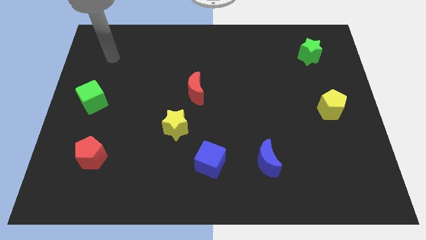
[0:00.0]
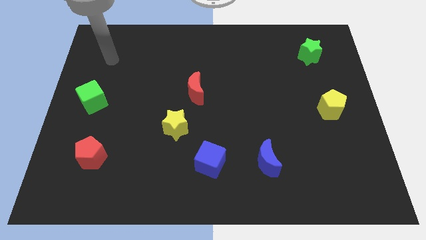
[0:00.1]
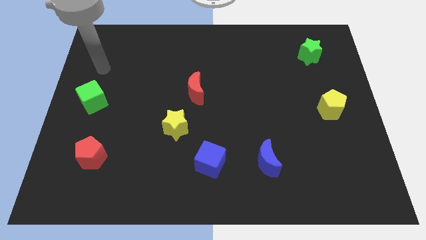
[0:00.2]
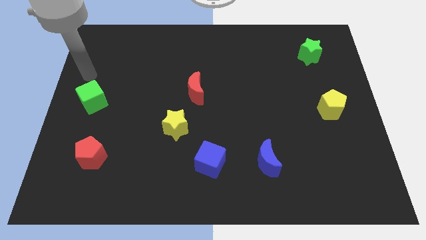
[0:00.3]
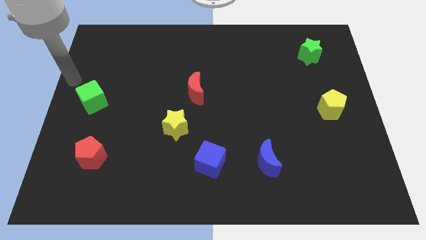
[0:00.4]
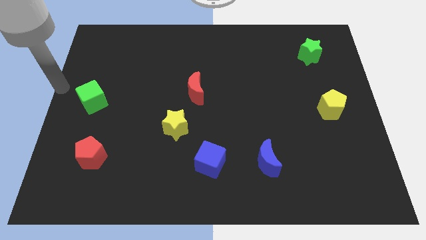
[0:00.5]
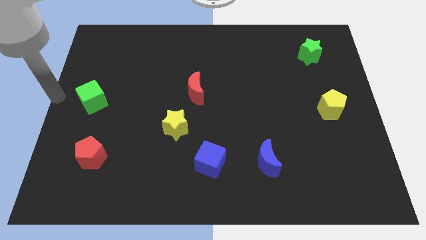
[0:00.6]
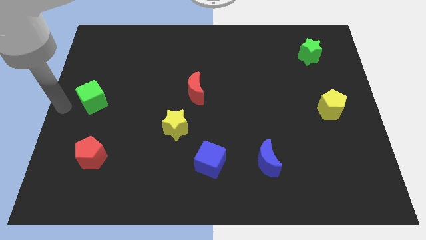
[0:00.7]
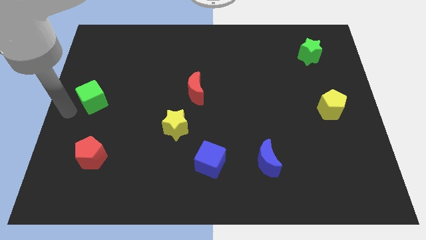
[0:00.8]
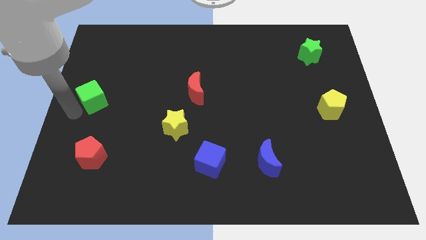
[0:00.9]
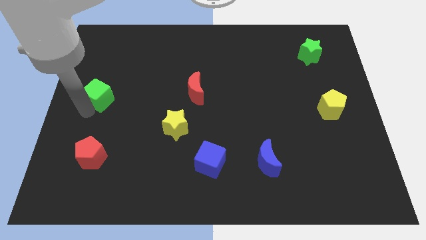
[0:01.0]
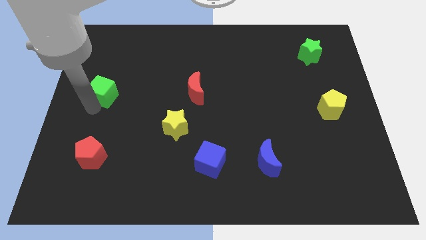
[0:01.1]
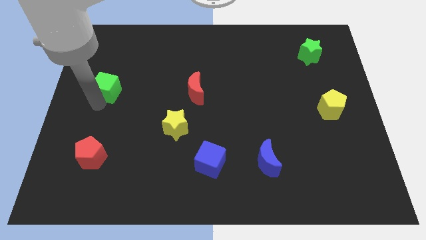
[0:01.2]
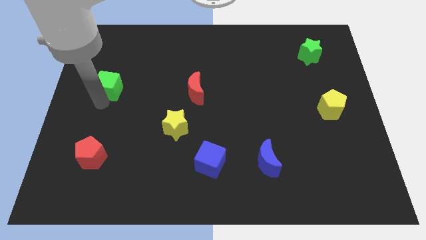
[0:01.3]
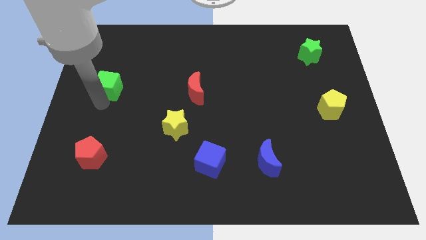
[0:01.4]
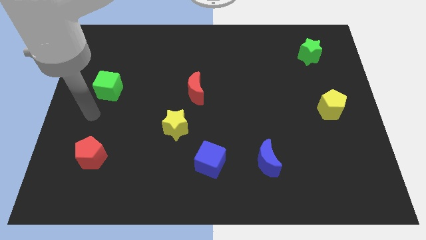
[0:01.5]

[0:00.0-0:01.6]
slightly move the green cube up

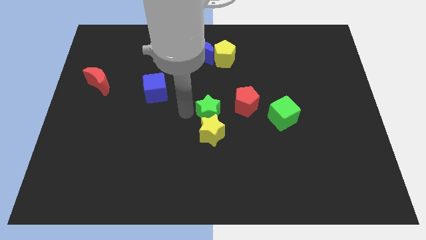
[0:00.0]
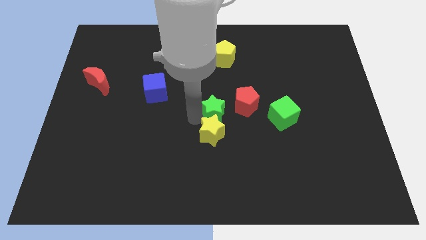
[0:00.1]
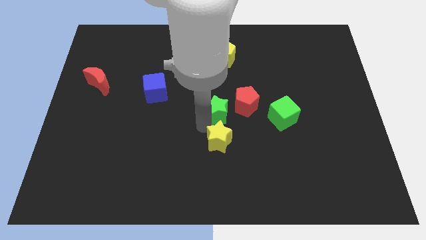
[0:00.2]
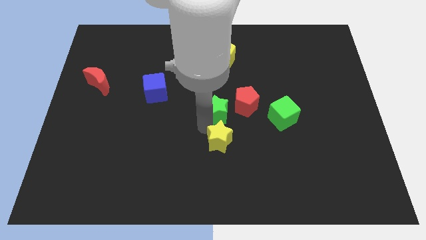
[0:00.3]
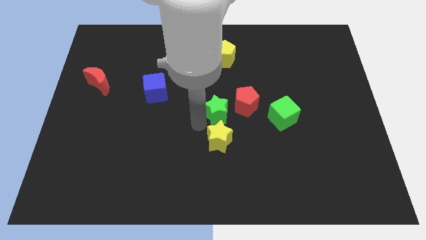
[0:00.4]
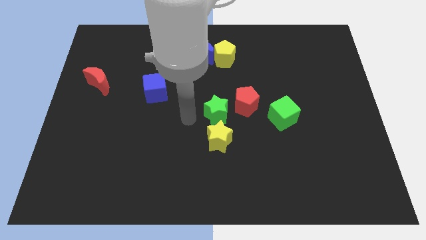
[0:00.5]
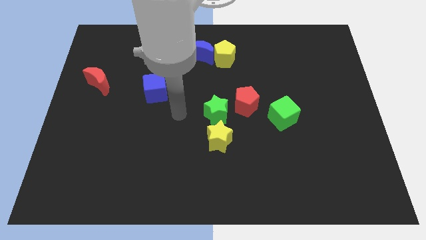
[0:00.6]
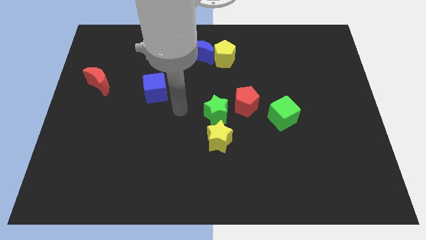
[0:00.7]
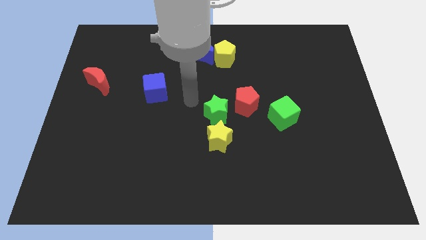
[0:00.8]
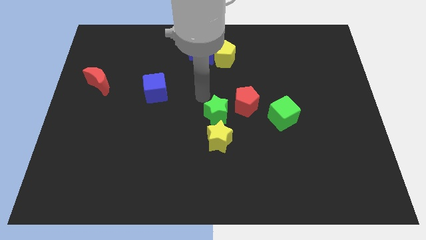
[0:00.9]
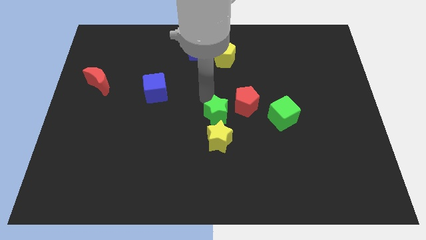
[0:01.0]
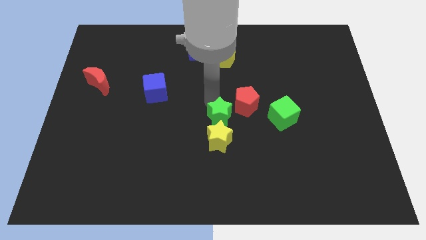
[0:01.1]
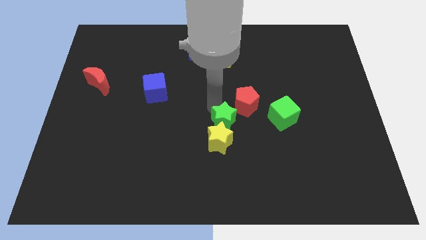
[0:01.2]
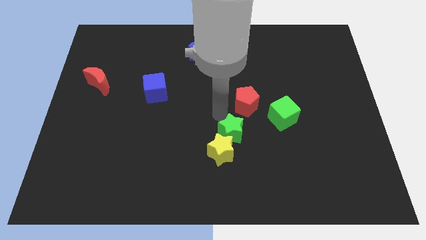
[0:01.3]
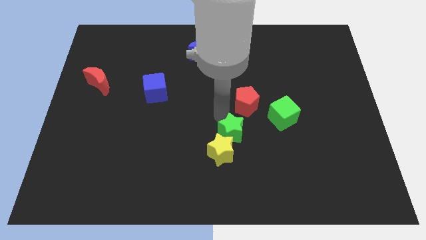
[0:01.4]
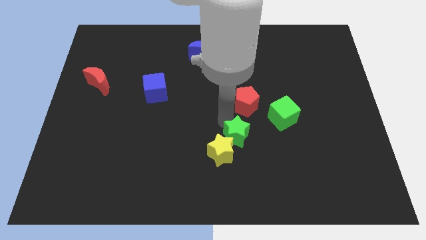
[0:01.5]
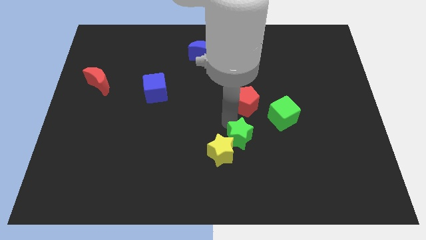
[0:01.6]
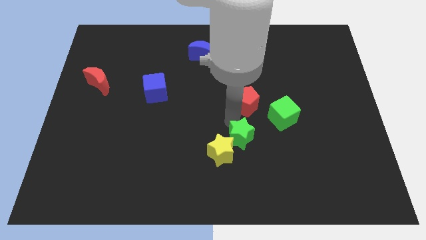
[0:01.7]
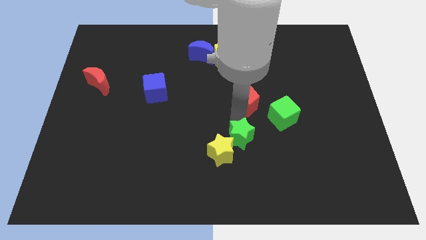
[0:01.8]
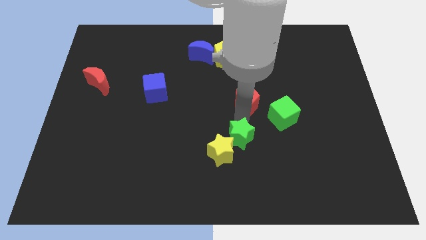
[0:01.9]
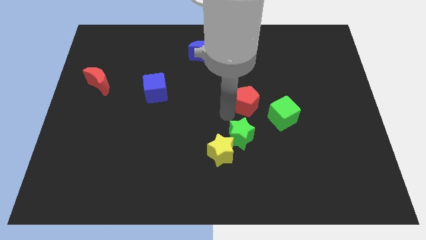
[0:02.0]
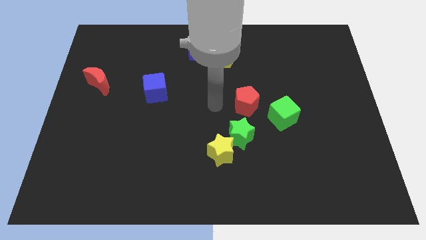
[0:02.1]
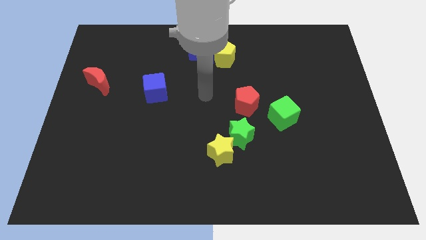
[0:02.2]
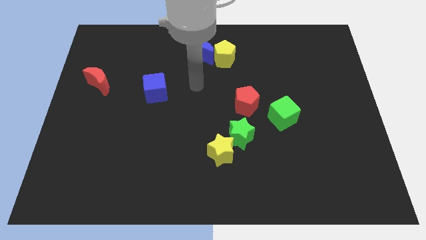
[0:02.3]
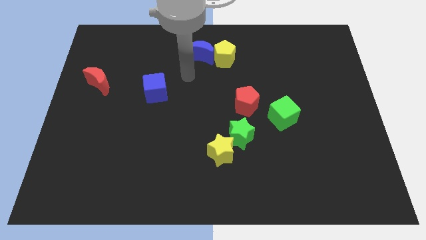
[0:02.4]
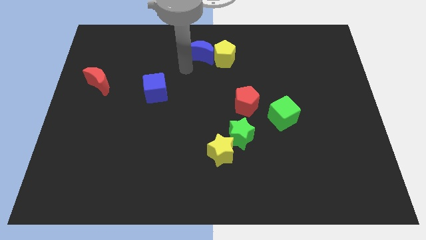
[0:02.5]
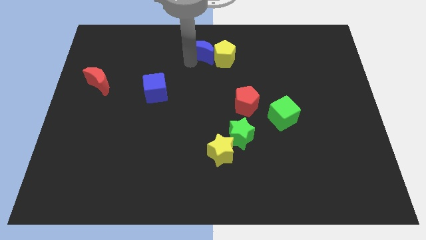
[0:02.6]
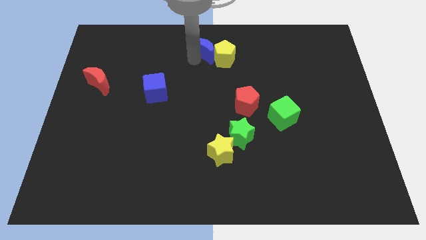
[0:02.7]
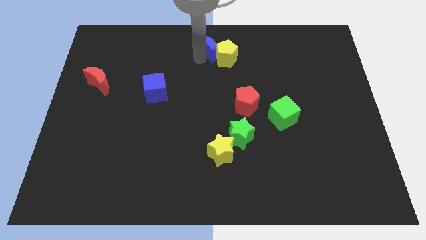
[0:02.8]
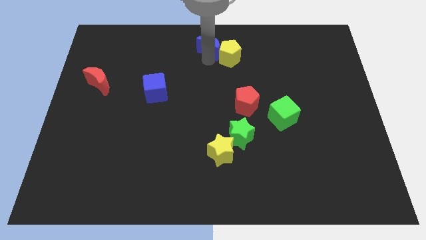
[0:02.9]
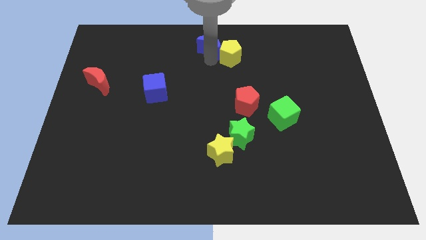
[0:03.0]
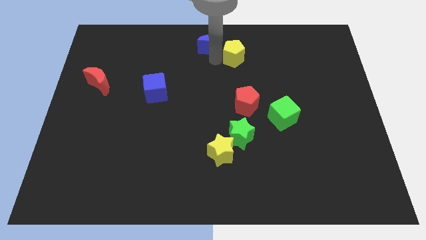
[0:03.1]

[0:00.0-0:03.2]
move green star the yellow star diagonal to each other

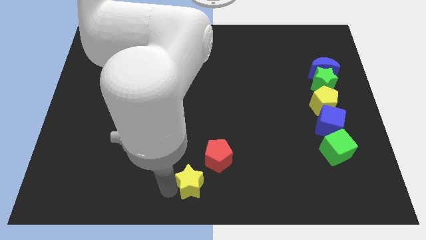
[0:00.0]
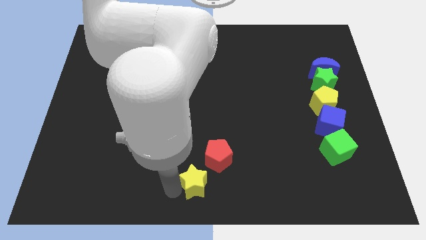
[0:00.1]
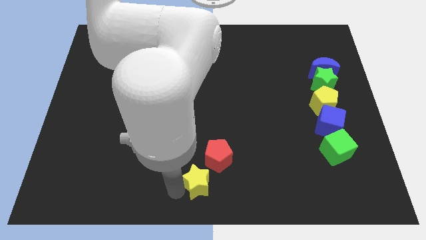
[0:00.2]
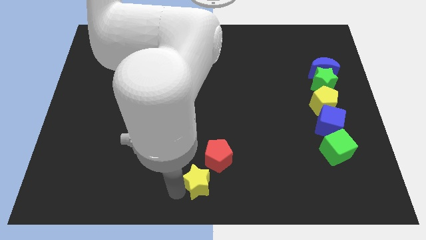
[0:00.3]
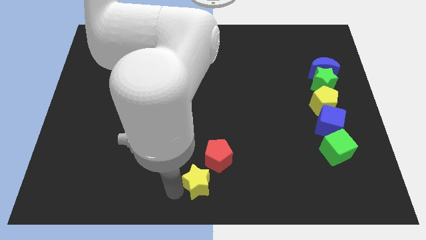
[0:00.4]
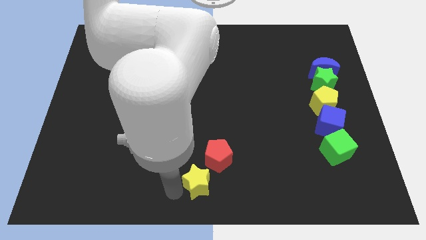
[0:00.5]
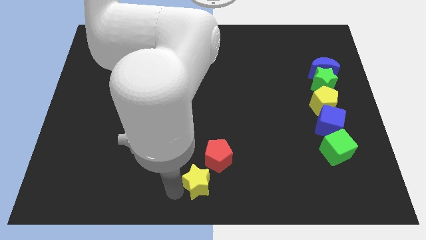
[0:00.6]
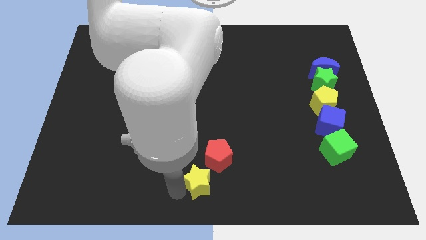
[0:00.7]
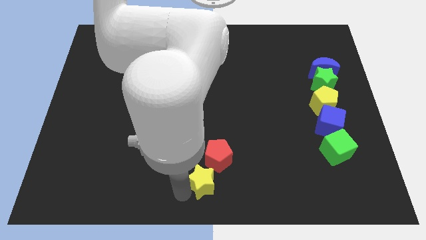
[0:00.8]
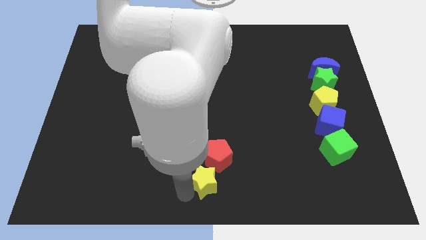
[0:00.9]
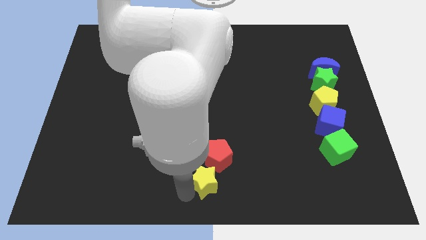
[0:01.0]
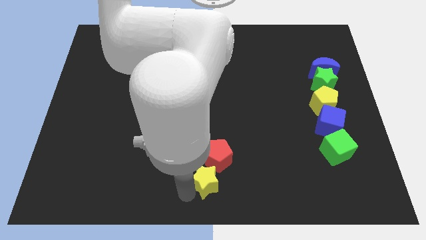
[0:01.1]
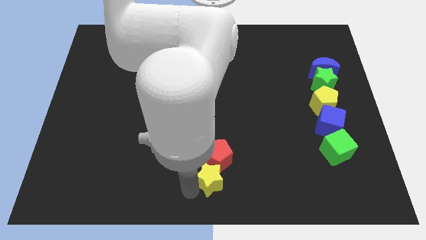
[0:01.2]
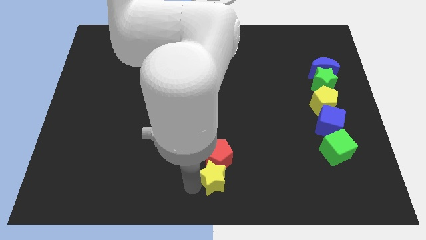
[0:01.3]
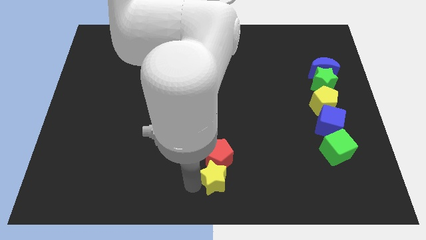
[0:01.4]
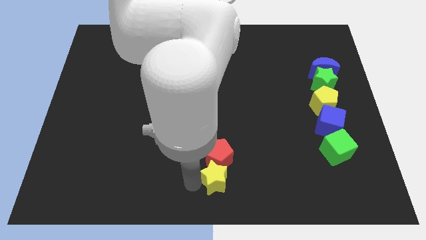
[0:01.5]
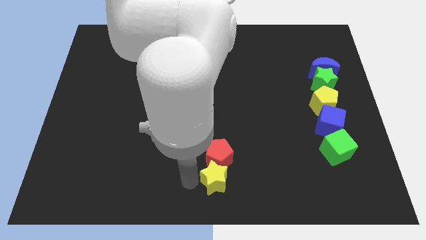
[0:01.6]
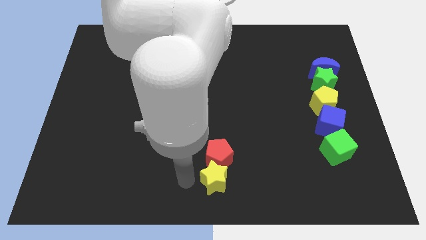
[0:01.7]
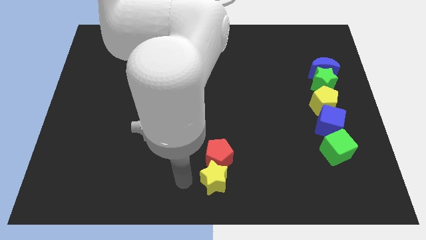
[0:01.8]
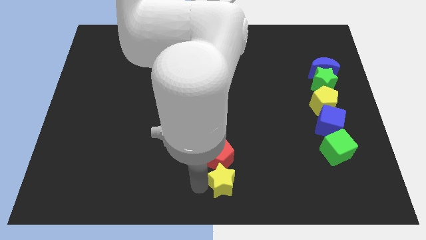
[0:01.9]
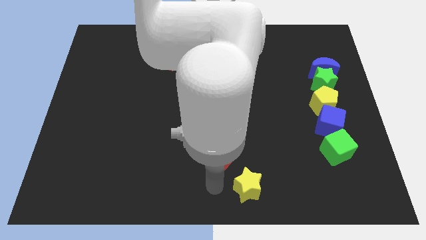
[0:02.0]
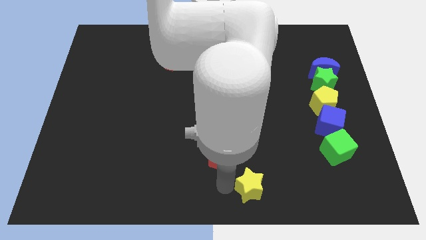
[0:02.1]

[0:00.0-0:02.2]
place the yellow star at the bottom right of the red pentagon

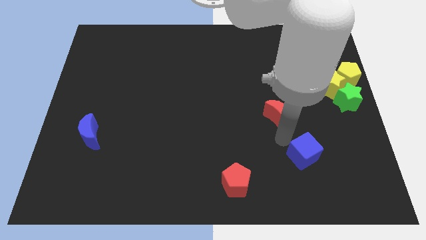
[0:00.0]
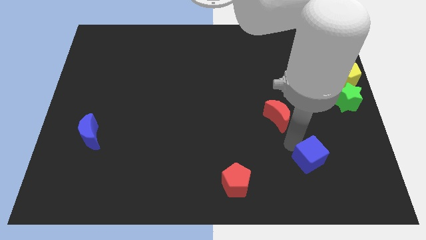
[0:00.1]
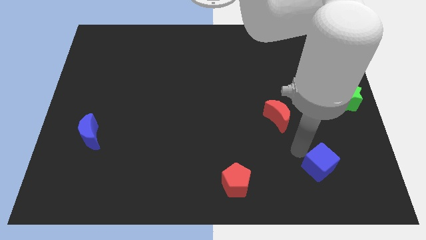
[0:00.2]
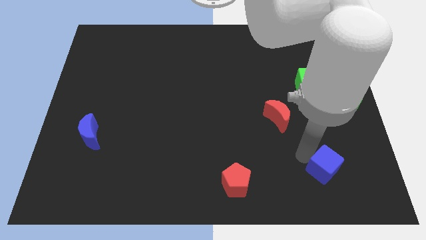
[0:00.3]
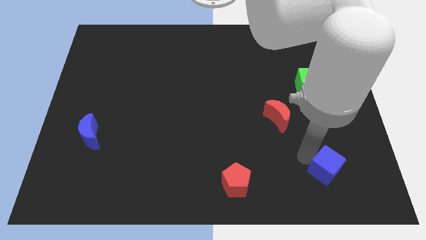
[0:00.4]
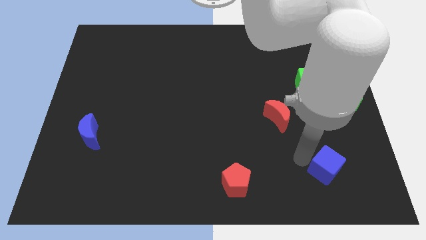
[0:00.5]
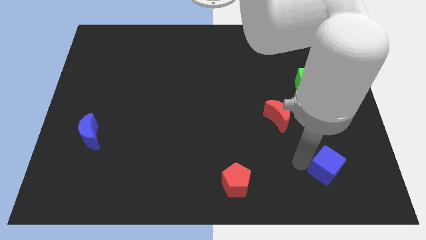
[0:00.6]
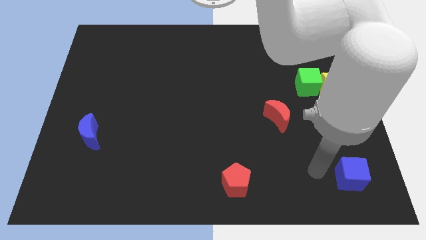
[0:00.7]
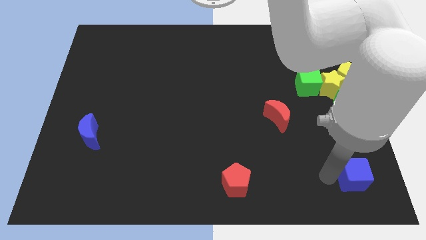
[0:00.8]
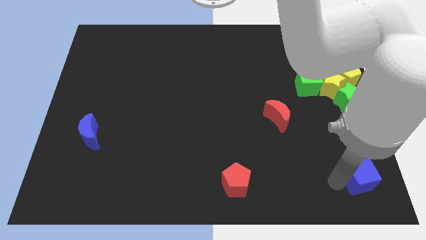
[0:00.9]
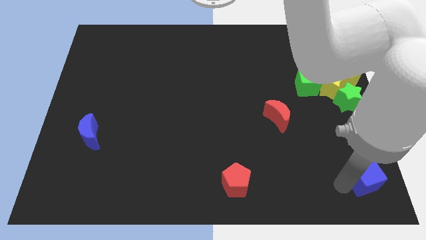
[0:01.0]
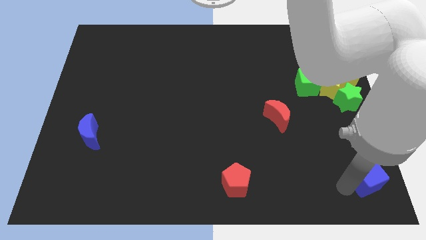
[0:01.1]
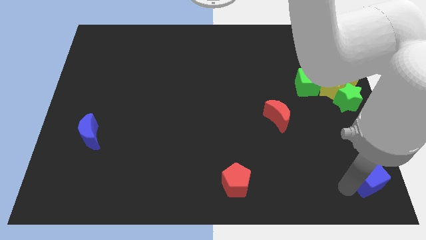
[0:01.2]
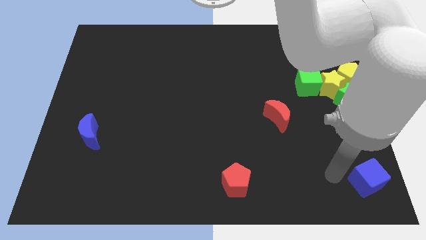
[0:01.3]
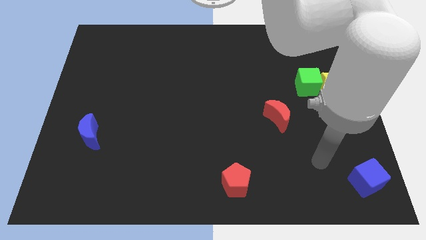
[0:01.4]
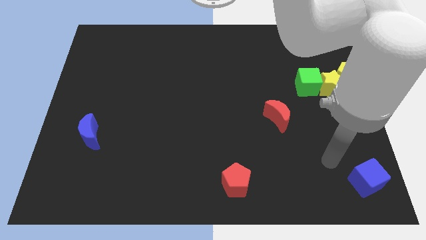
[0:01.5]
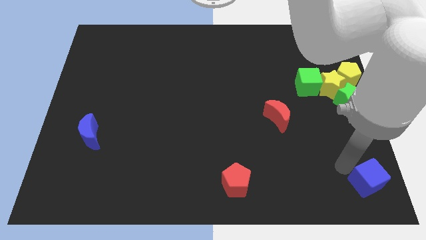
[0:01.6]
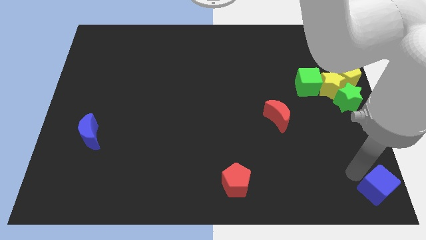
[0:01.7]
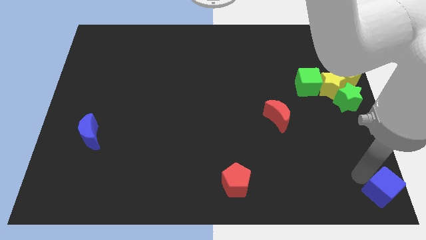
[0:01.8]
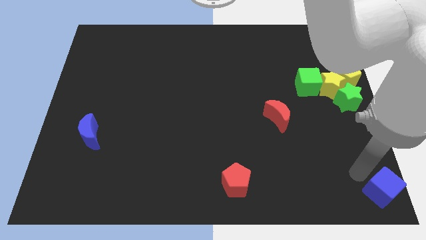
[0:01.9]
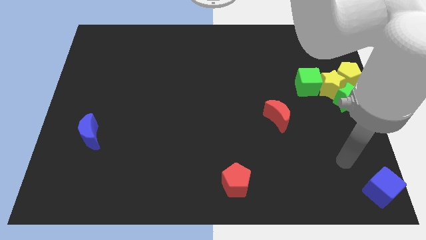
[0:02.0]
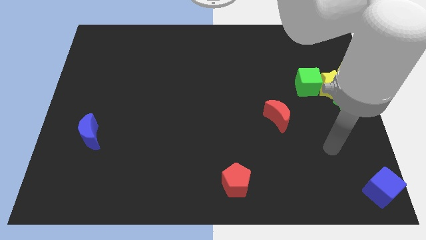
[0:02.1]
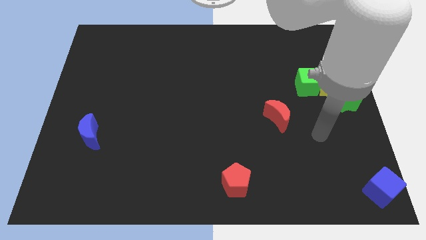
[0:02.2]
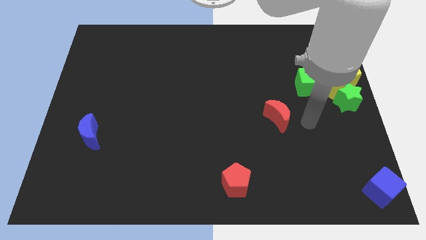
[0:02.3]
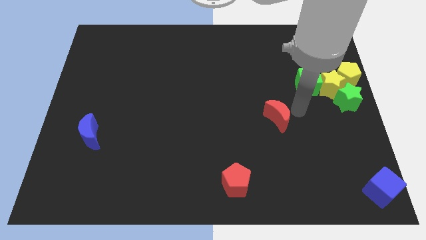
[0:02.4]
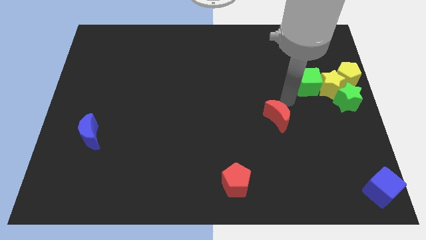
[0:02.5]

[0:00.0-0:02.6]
move the blue cube to the bottom right of the board
